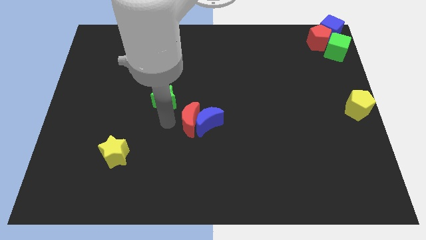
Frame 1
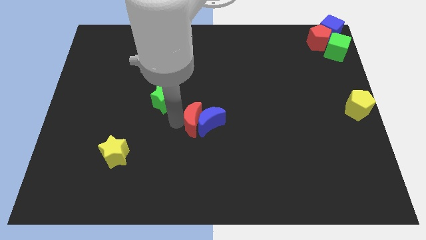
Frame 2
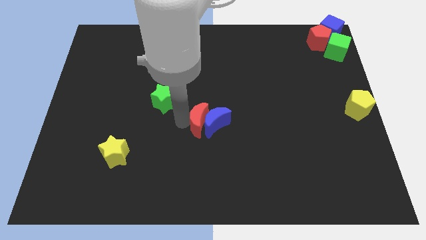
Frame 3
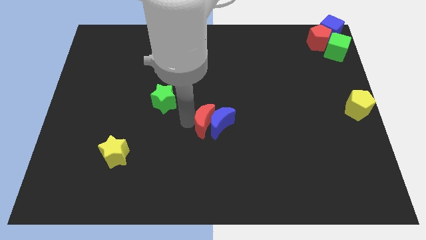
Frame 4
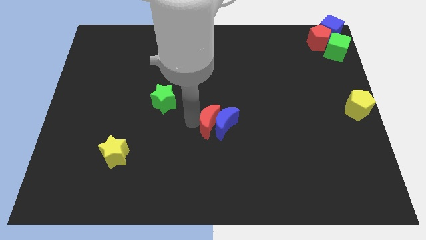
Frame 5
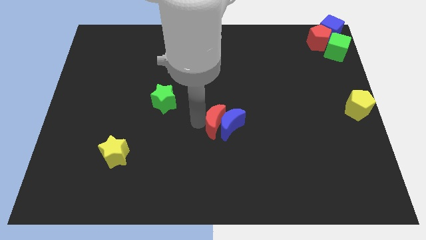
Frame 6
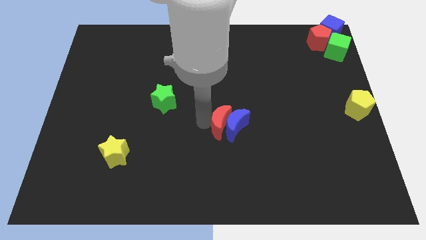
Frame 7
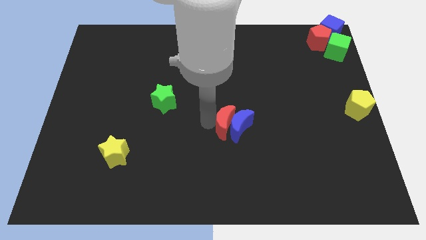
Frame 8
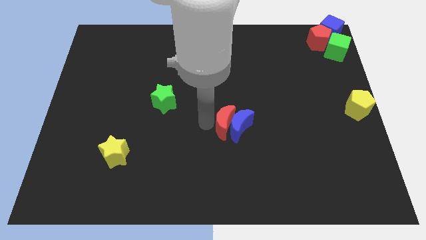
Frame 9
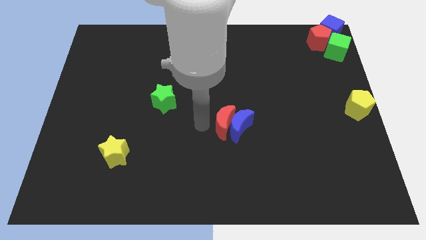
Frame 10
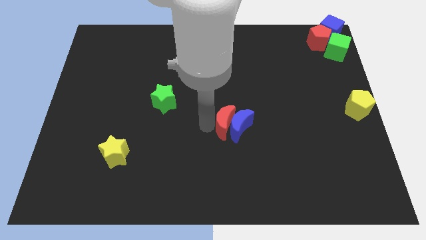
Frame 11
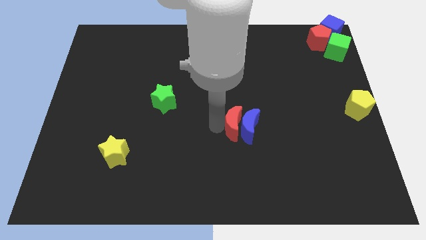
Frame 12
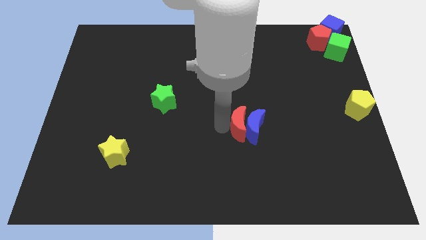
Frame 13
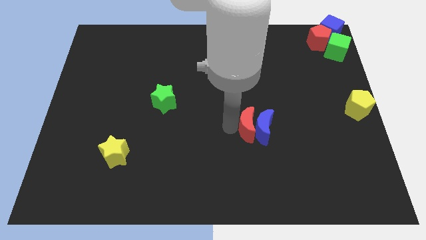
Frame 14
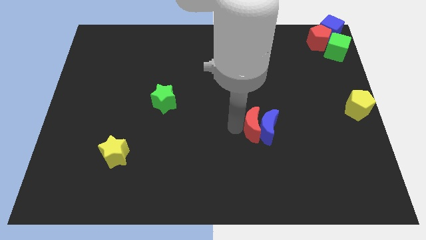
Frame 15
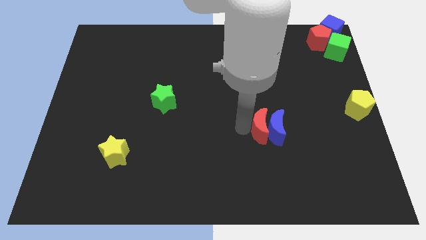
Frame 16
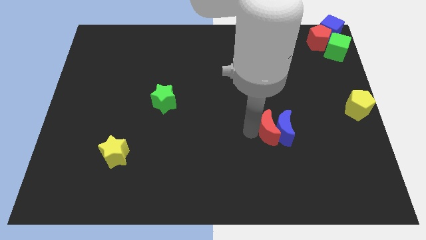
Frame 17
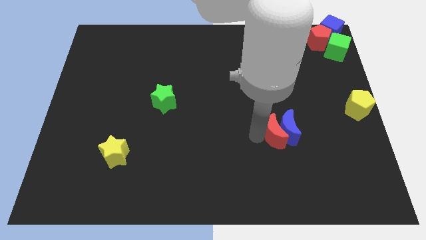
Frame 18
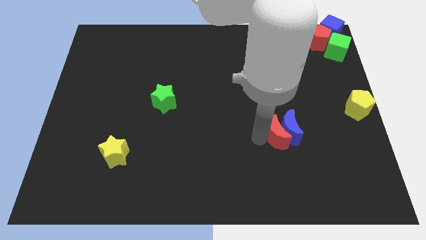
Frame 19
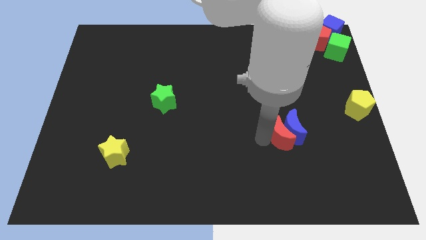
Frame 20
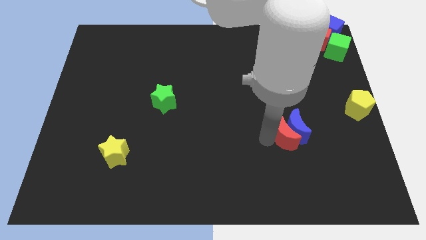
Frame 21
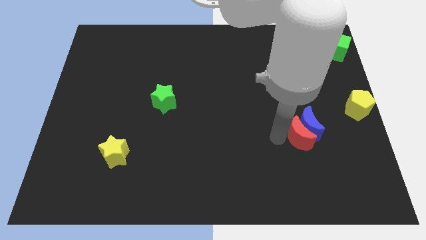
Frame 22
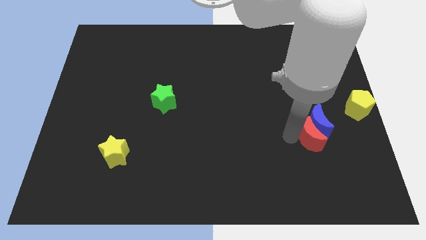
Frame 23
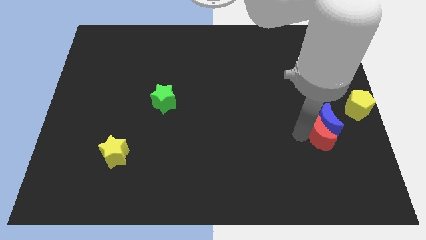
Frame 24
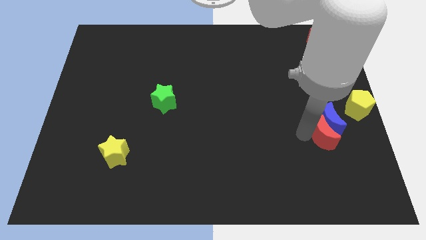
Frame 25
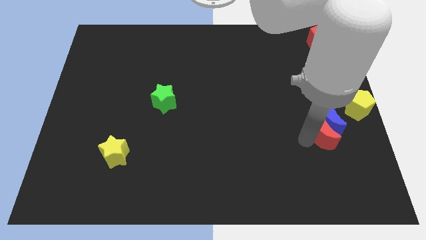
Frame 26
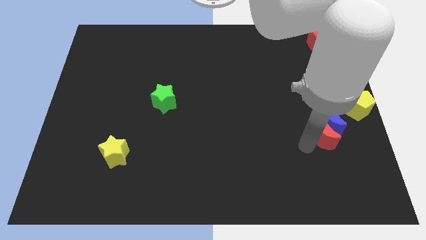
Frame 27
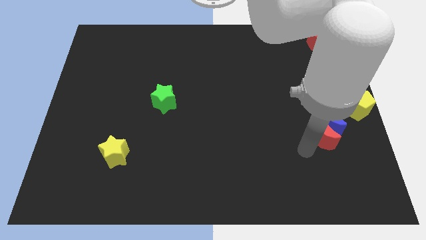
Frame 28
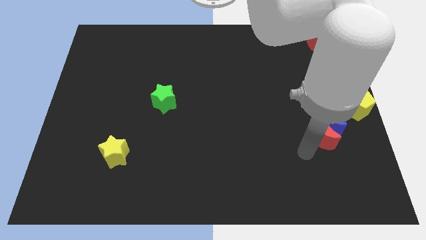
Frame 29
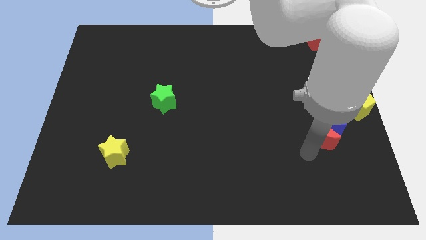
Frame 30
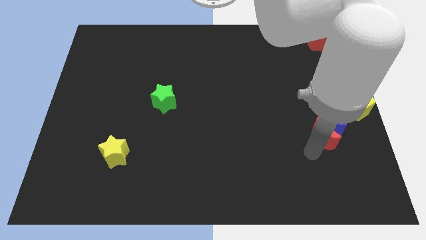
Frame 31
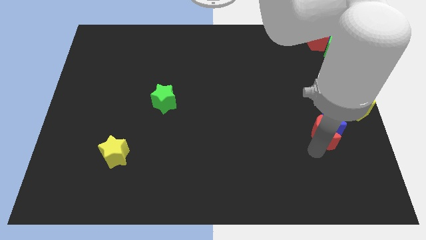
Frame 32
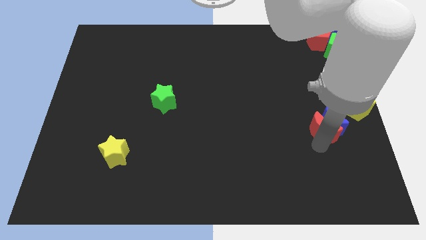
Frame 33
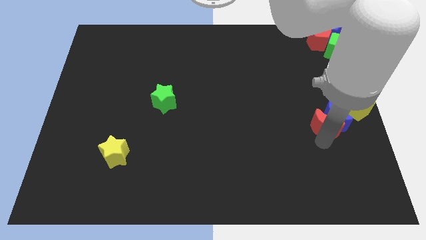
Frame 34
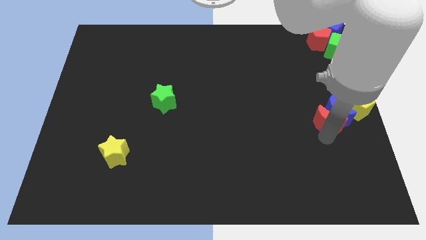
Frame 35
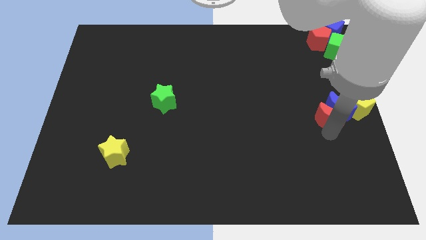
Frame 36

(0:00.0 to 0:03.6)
move blue and red moons towards yellow pentagon

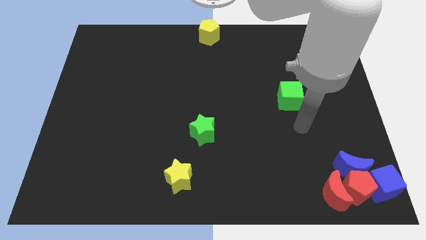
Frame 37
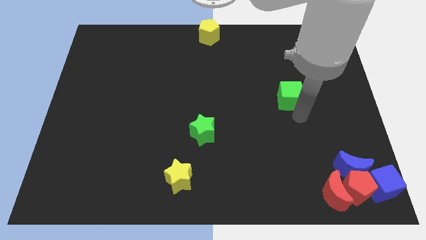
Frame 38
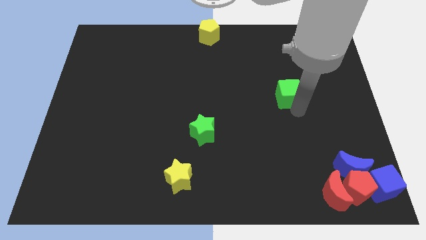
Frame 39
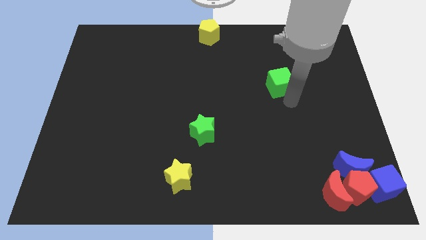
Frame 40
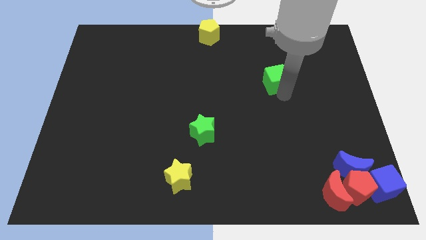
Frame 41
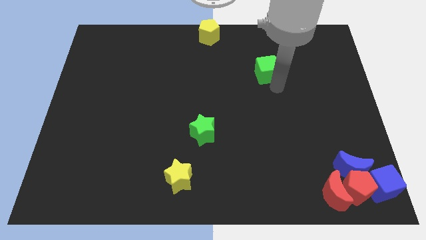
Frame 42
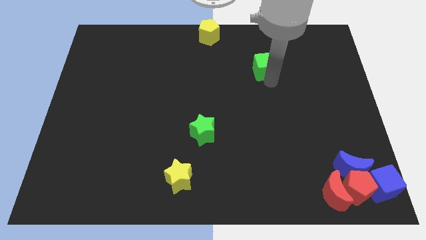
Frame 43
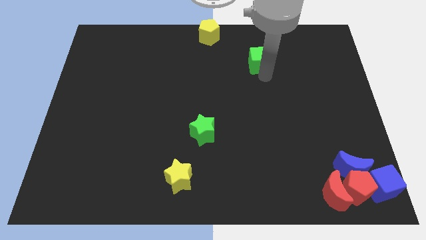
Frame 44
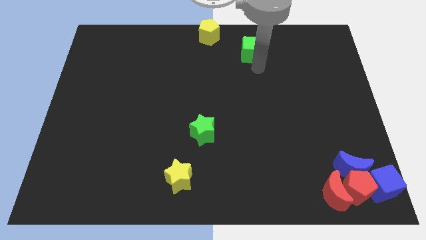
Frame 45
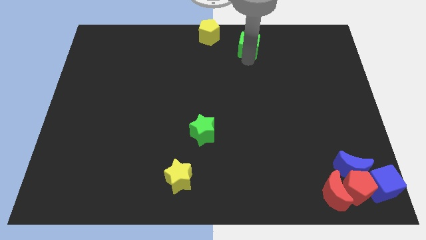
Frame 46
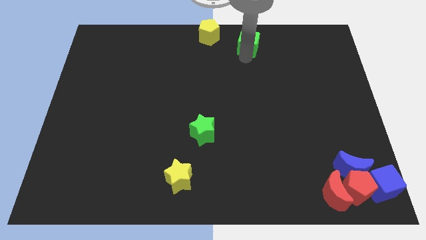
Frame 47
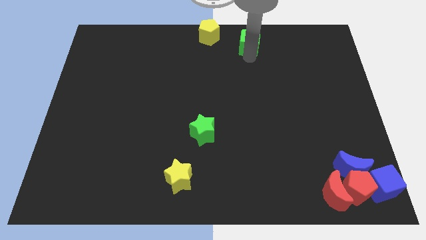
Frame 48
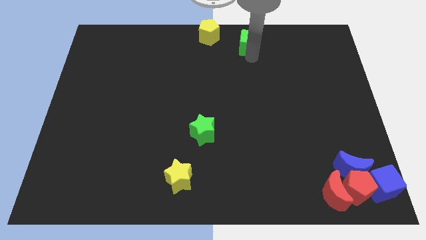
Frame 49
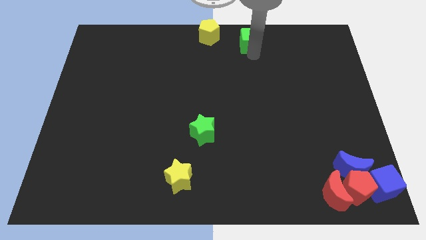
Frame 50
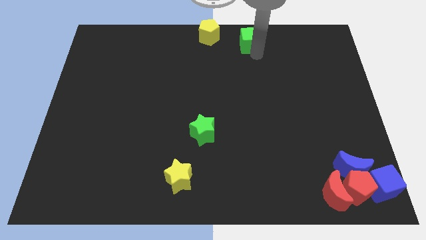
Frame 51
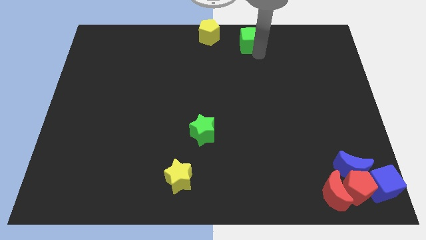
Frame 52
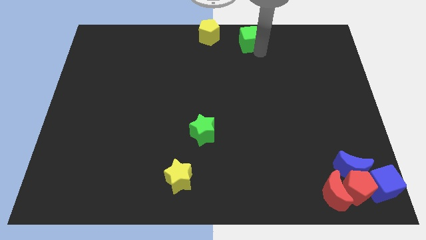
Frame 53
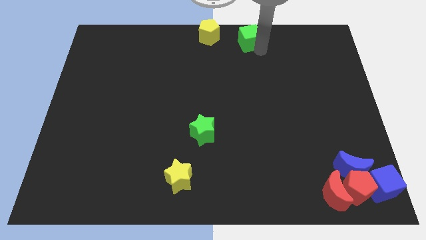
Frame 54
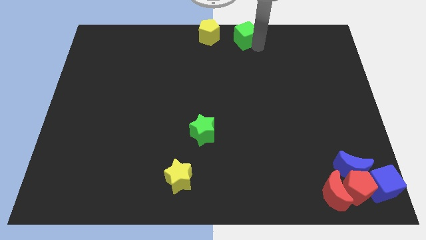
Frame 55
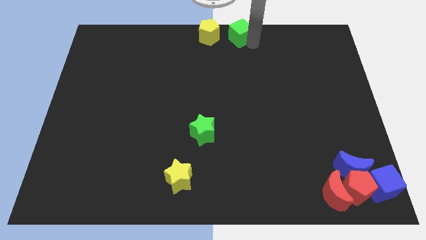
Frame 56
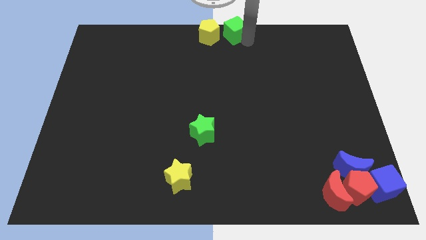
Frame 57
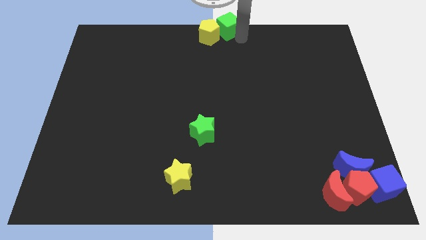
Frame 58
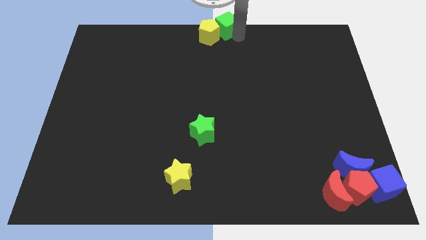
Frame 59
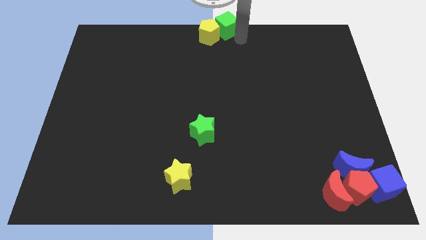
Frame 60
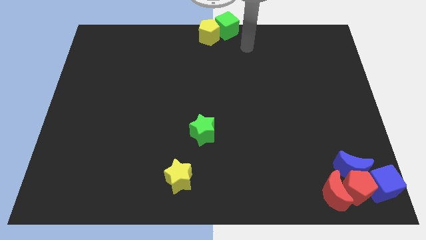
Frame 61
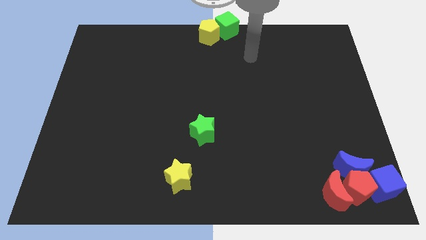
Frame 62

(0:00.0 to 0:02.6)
push the green cube to the right of the yellow pentagon

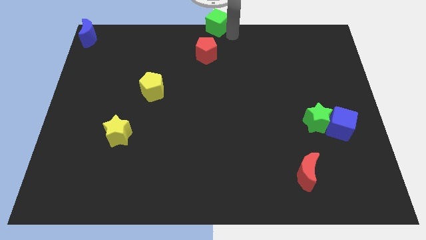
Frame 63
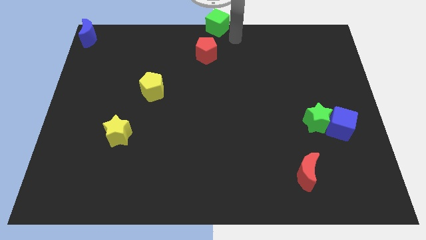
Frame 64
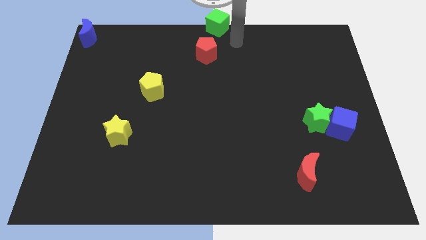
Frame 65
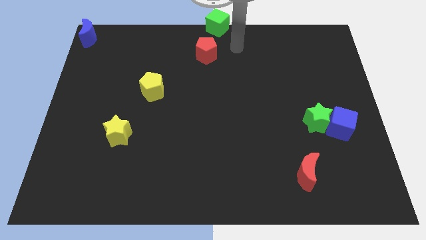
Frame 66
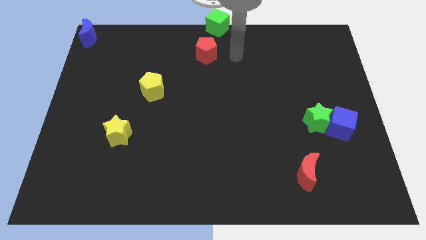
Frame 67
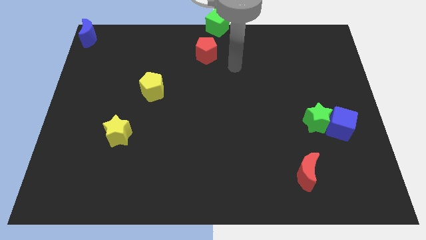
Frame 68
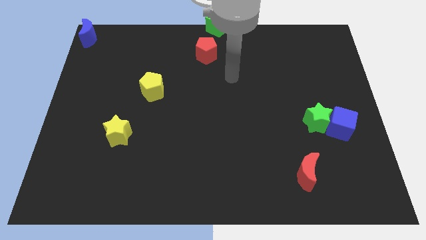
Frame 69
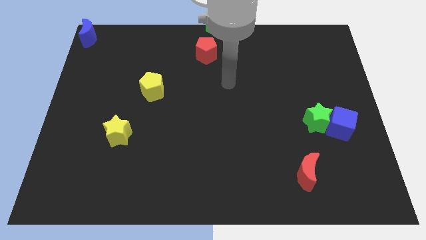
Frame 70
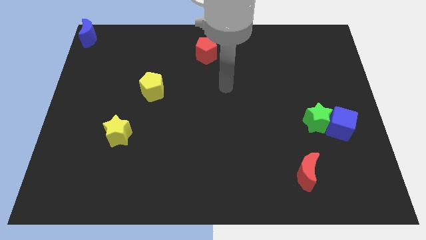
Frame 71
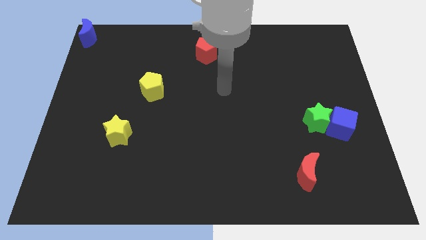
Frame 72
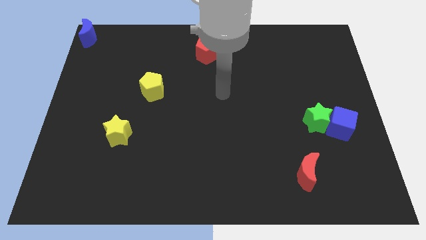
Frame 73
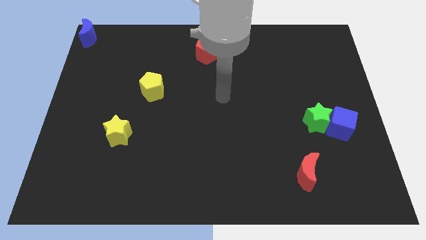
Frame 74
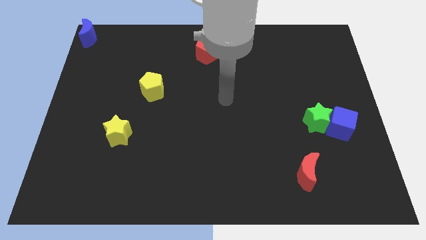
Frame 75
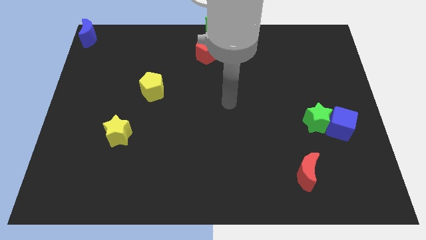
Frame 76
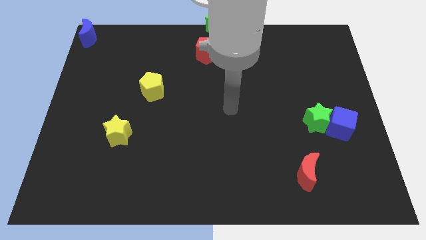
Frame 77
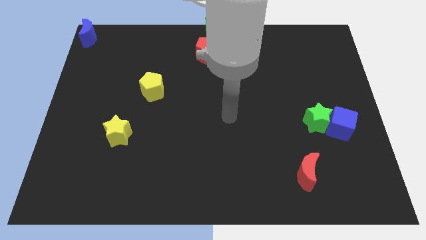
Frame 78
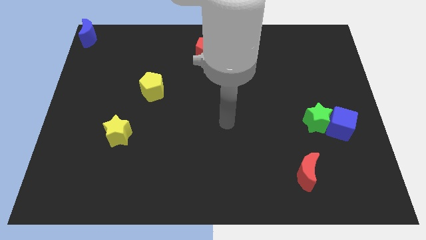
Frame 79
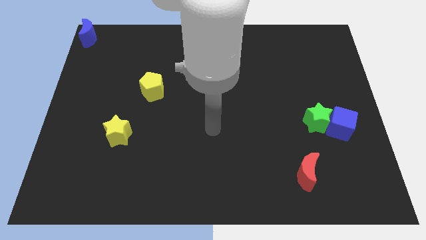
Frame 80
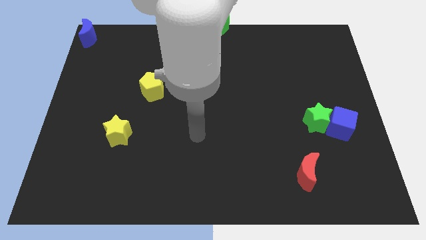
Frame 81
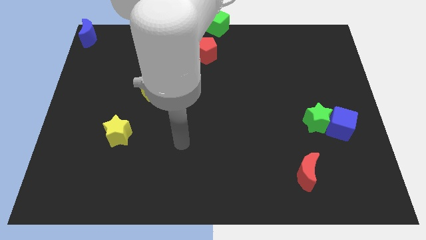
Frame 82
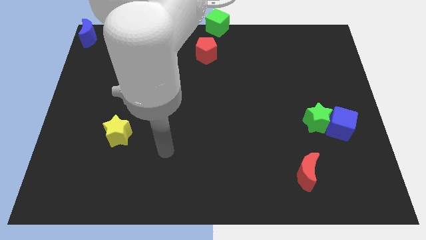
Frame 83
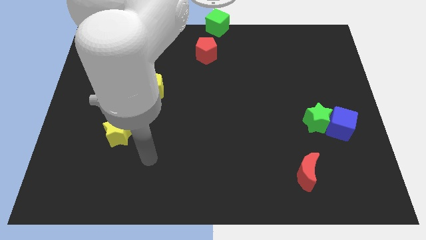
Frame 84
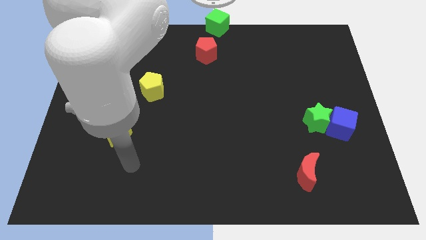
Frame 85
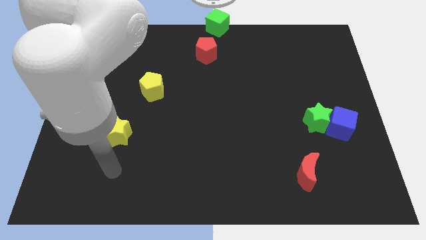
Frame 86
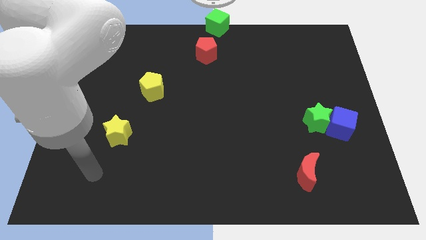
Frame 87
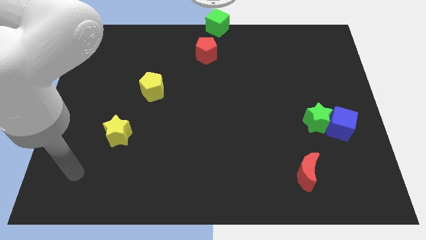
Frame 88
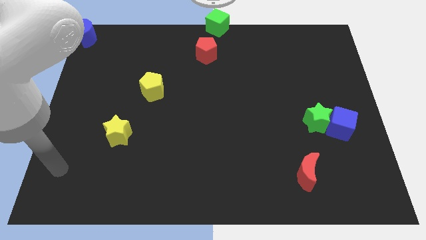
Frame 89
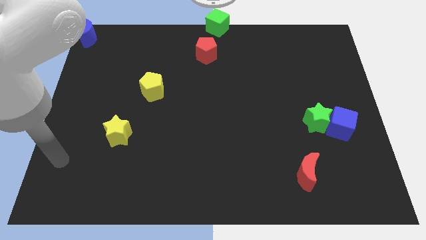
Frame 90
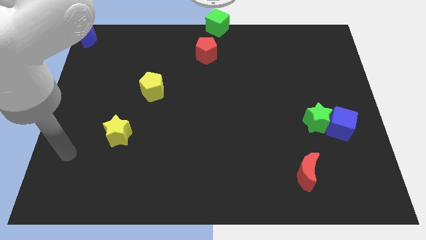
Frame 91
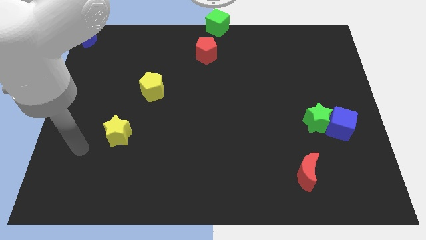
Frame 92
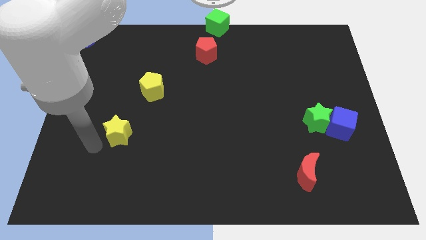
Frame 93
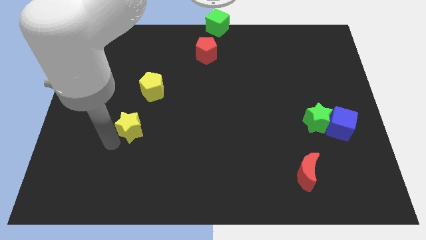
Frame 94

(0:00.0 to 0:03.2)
move your arm towards the yellow star
